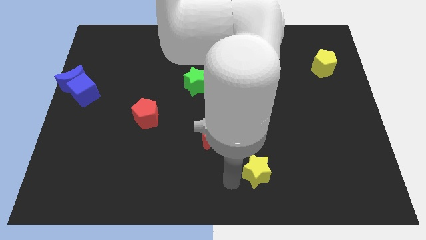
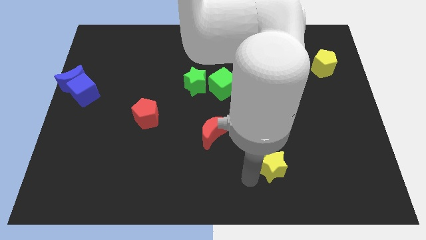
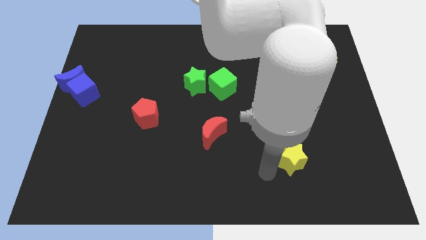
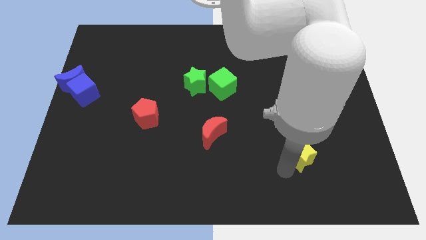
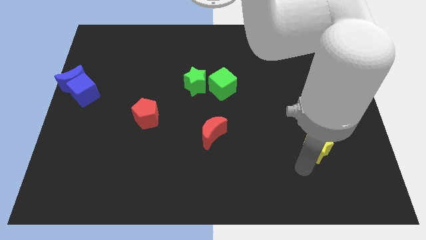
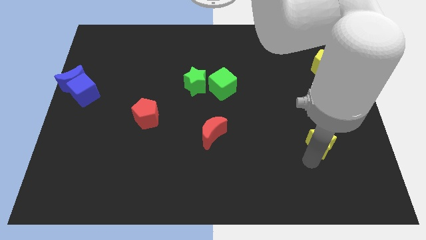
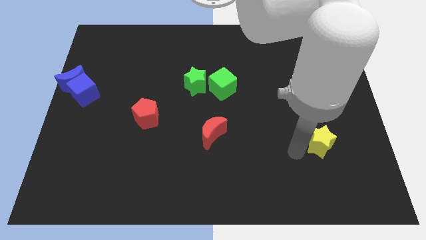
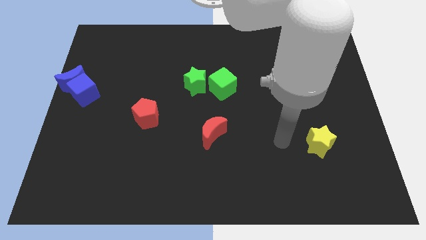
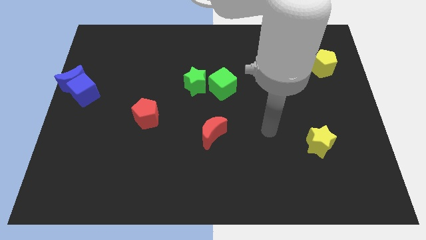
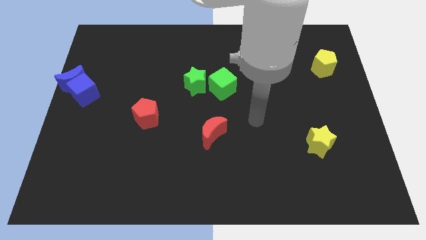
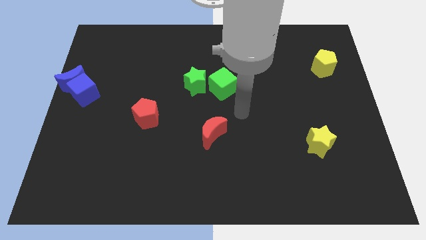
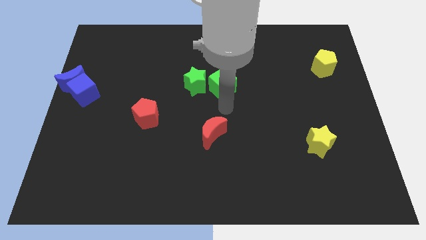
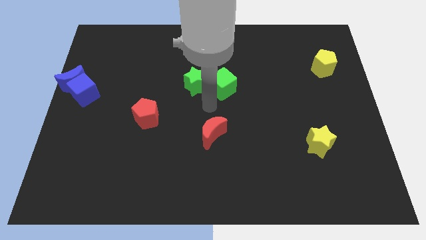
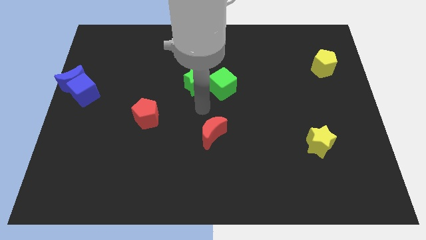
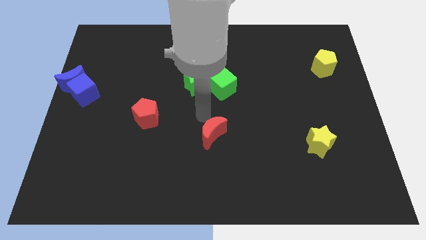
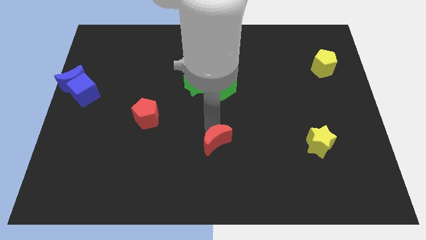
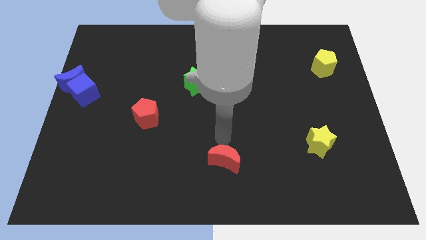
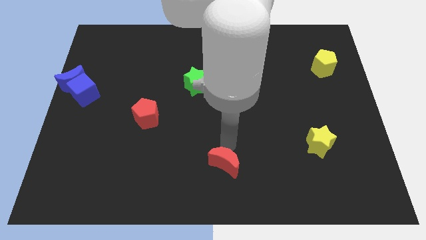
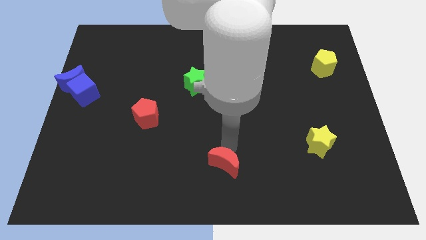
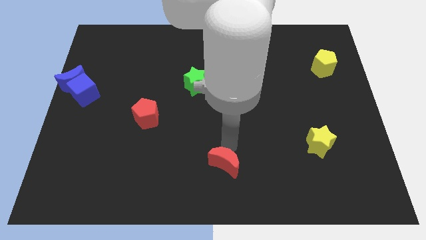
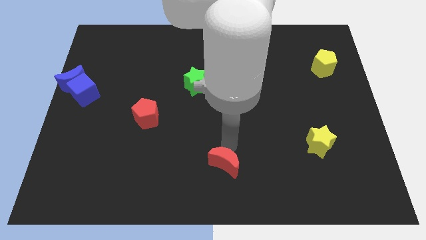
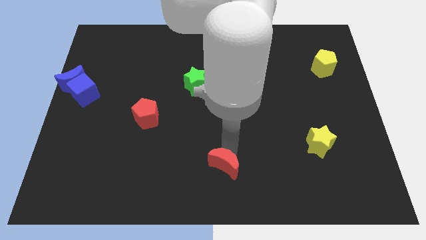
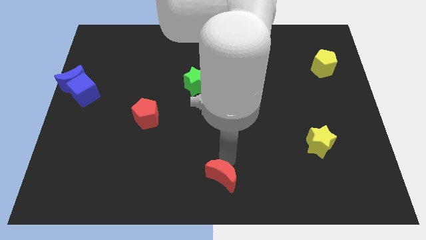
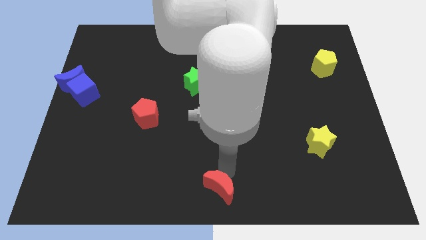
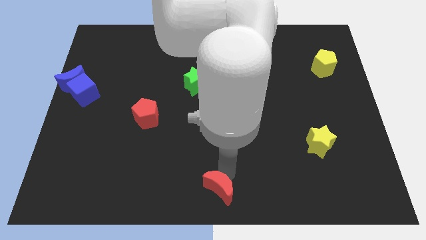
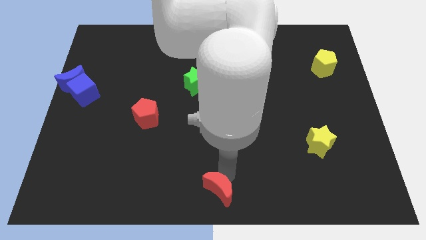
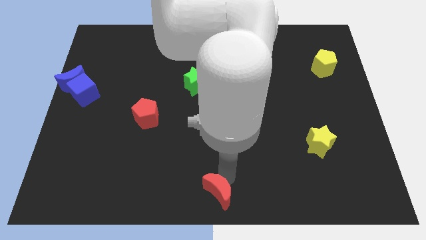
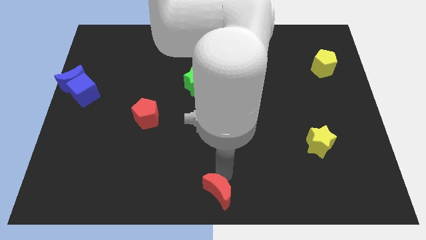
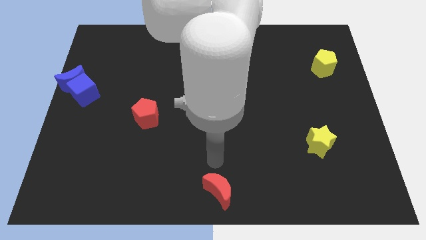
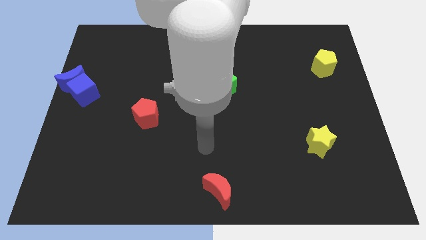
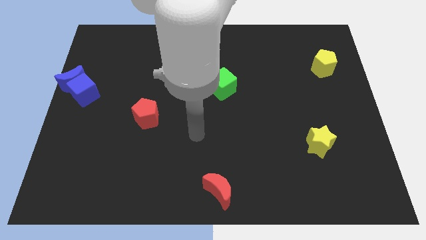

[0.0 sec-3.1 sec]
put yellow star and red moon in a diagonal line

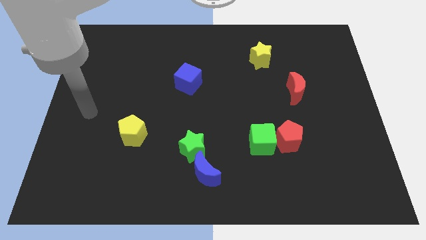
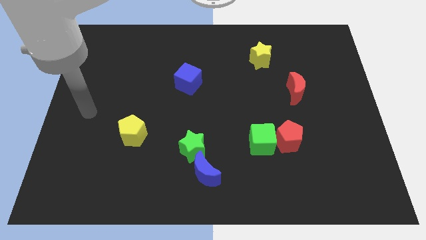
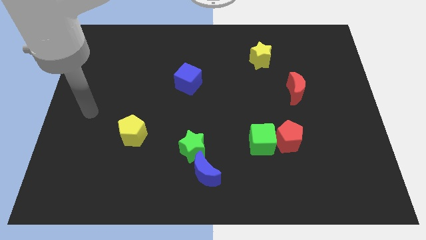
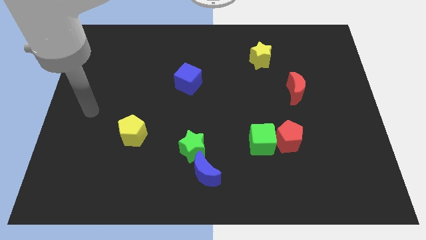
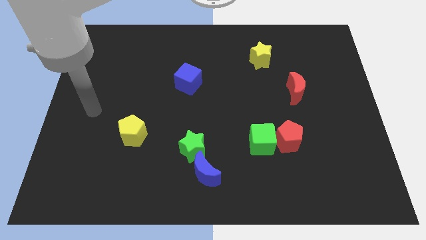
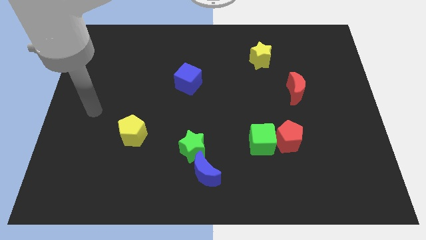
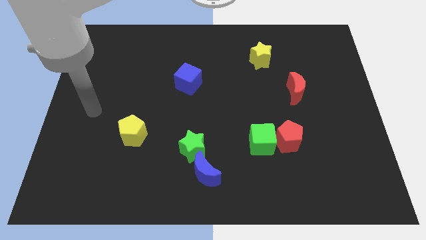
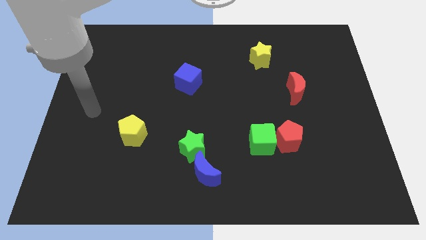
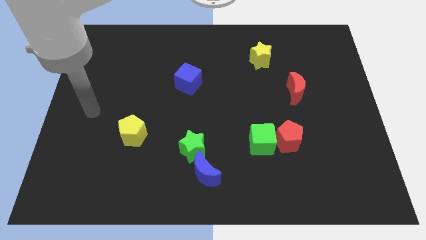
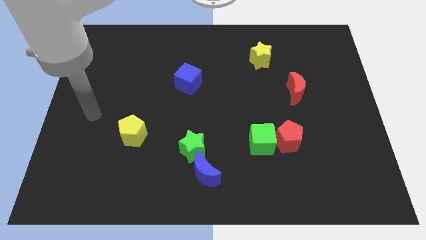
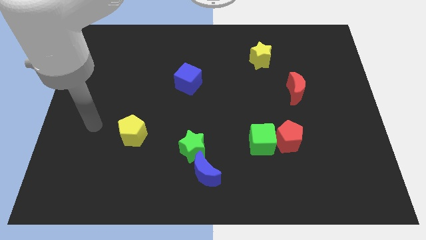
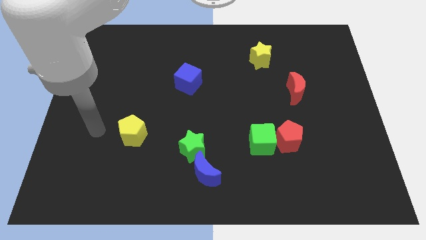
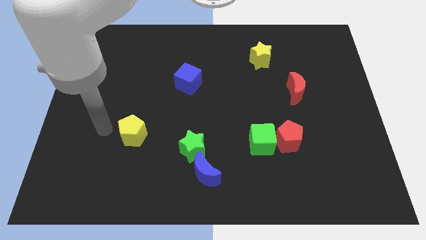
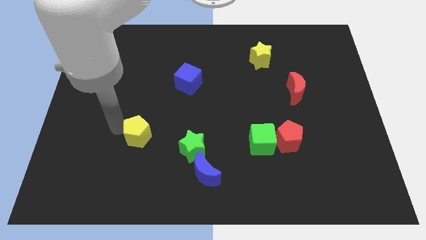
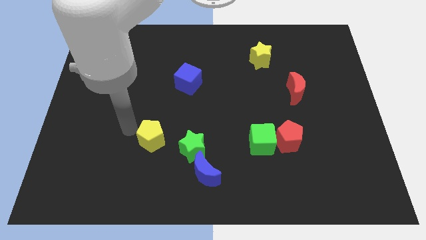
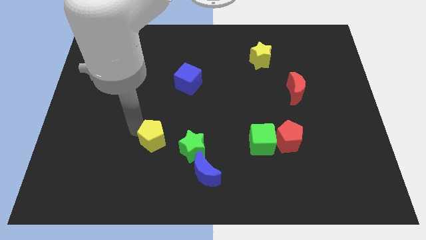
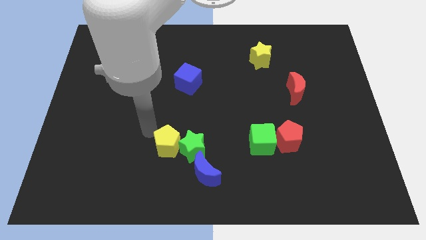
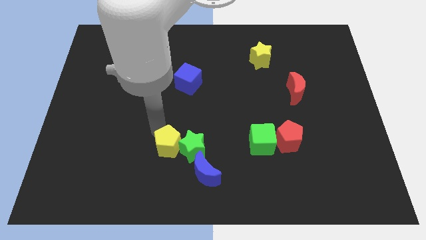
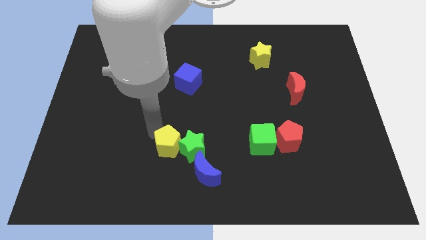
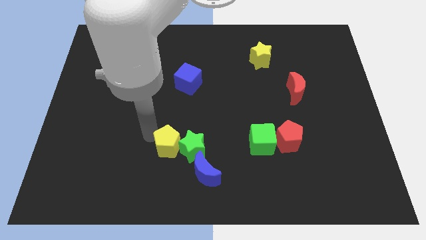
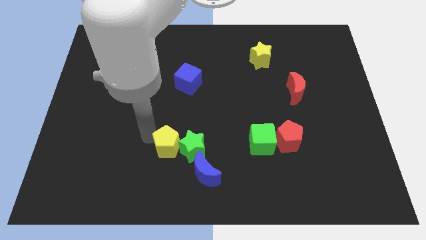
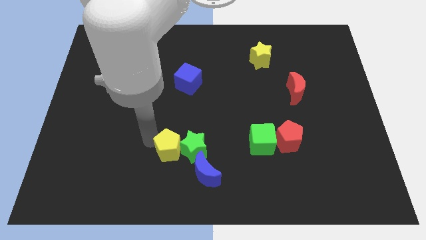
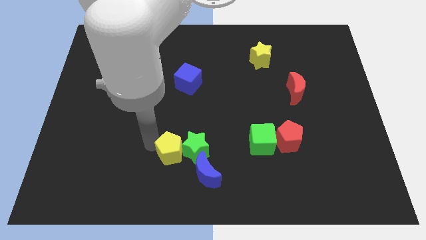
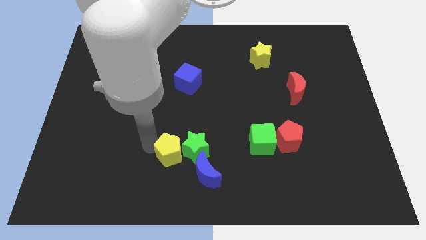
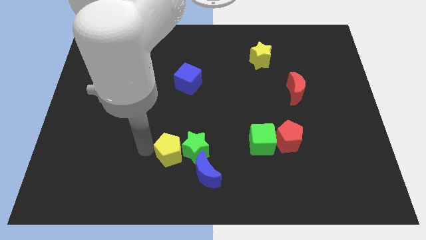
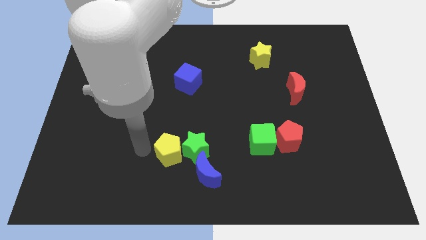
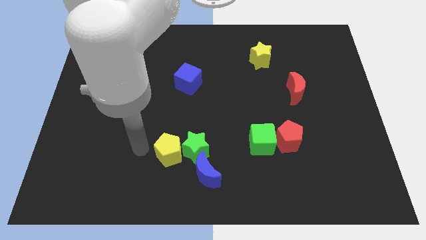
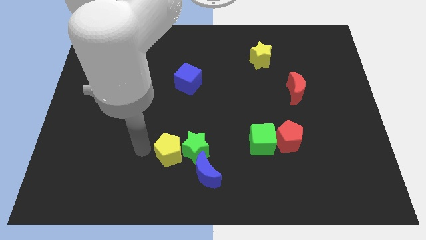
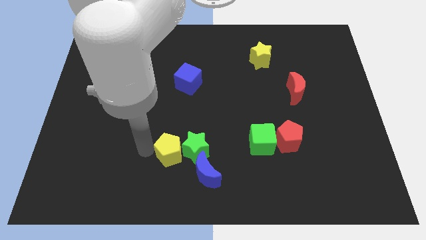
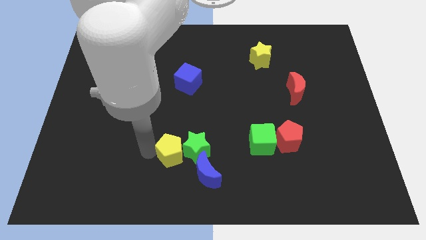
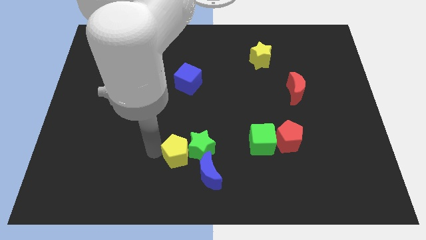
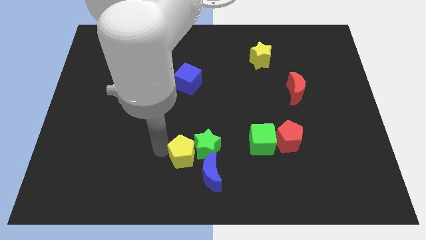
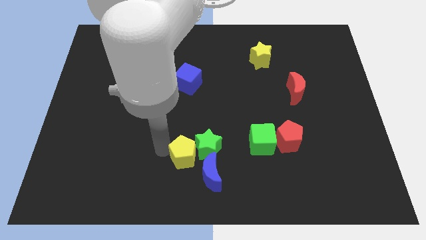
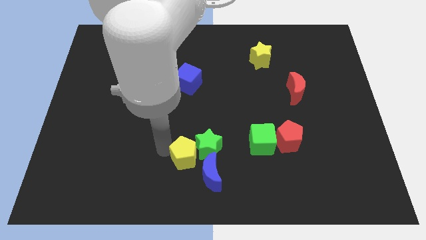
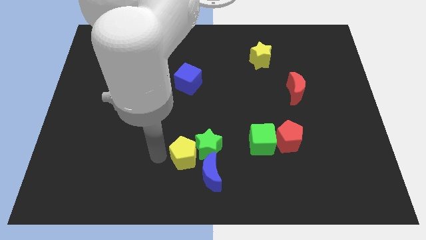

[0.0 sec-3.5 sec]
move the yellow pentagon into the green star

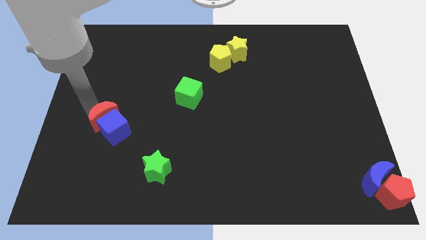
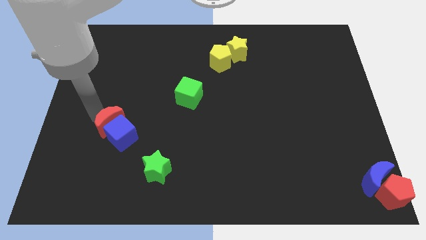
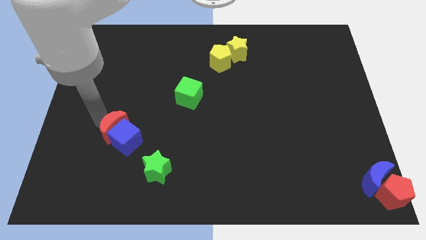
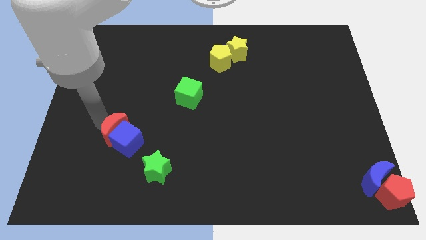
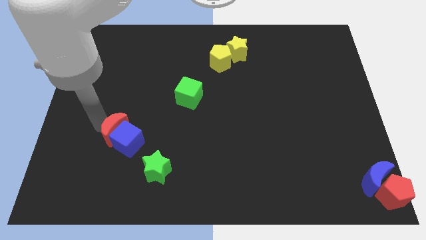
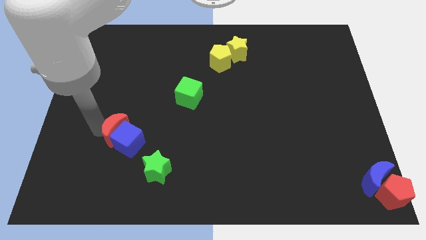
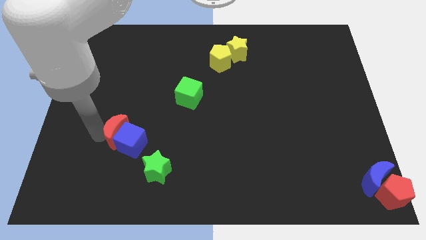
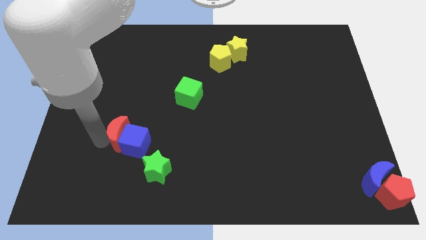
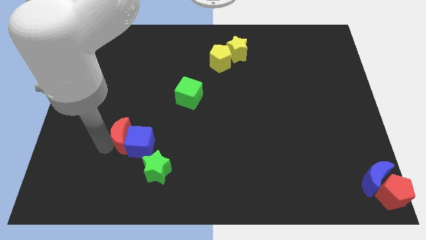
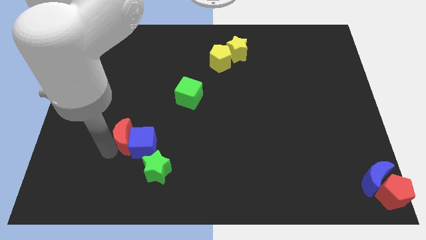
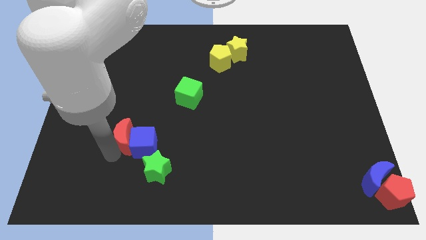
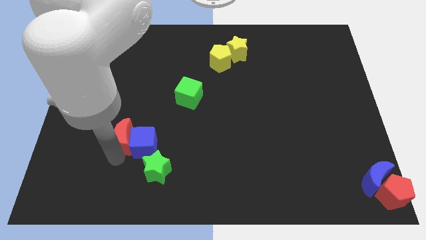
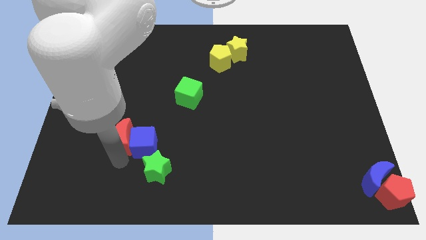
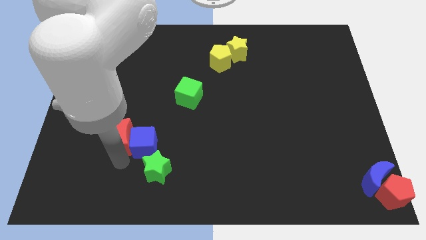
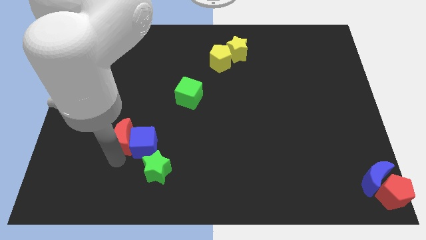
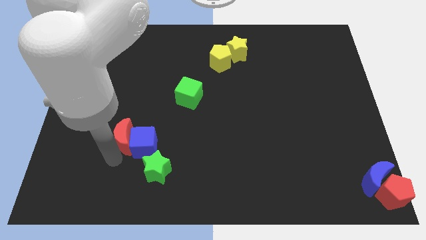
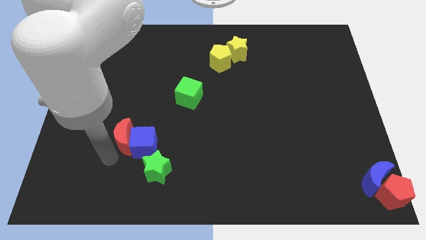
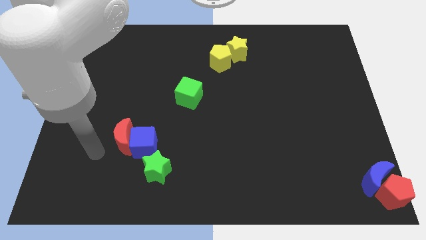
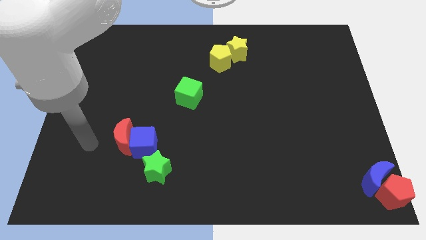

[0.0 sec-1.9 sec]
move the blue cube with the red crescent towards the green star

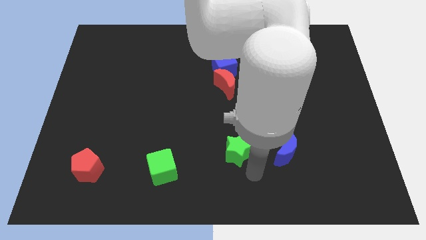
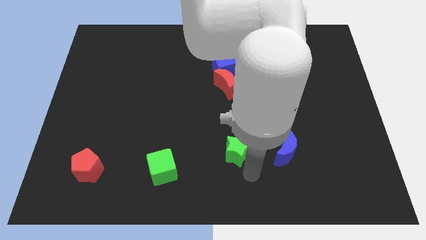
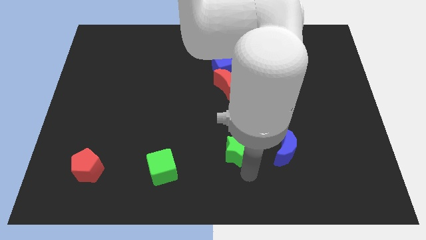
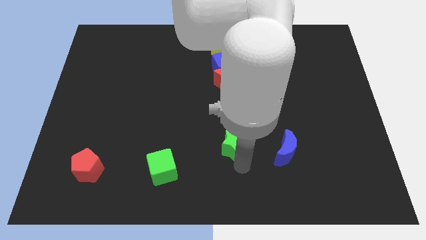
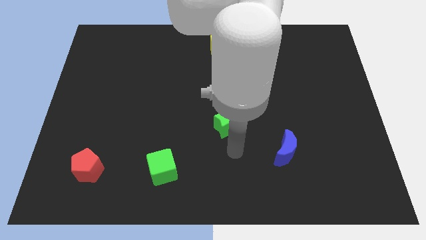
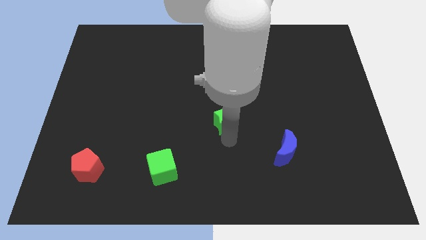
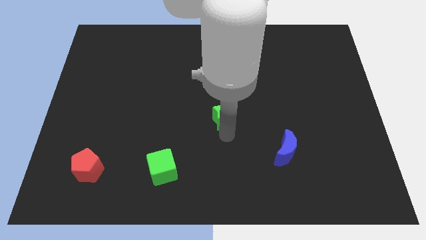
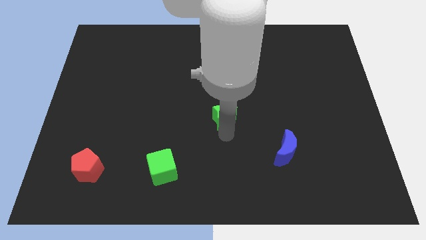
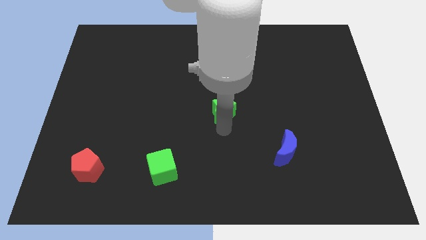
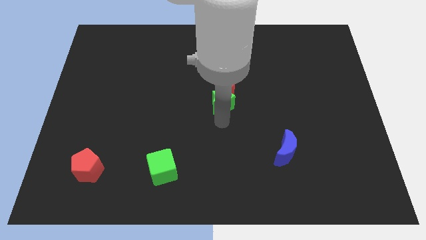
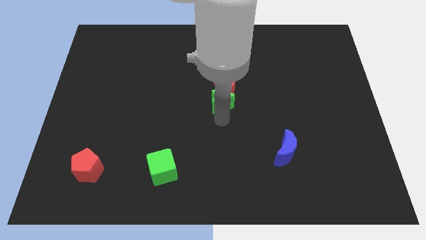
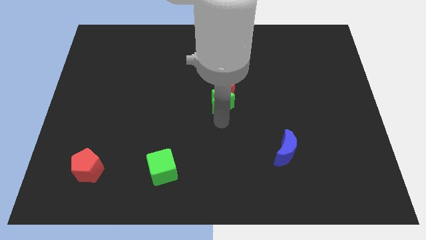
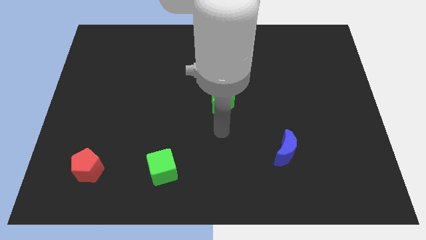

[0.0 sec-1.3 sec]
place the green star vertically below the red moon
